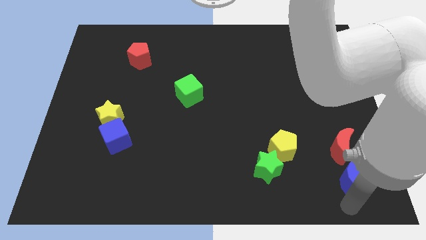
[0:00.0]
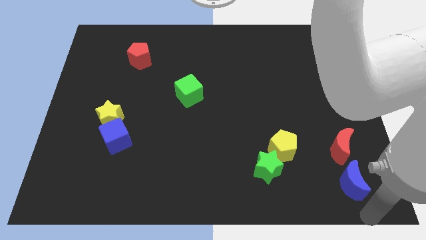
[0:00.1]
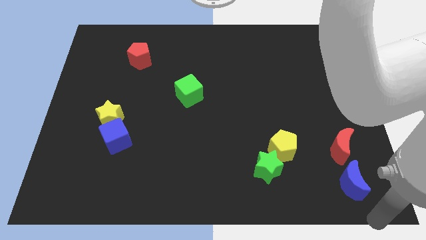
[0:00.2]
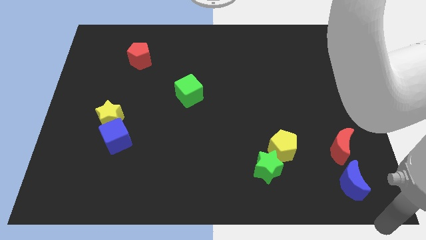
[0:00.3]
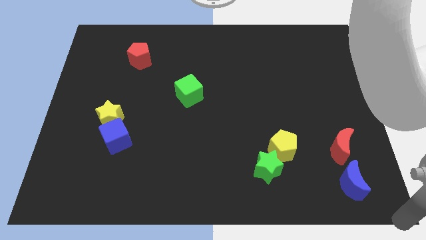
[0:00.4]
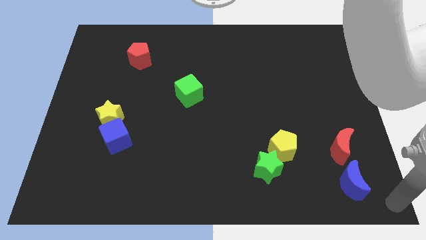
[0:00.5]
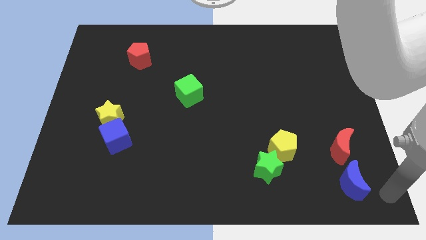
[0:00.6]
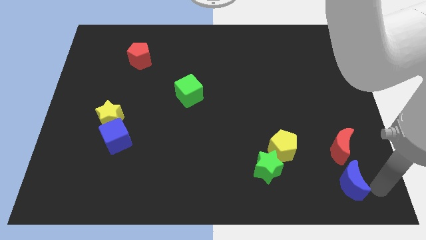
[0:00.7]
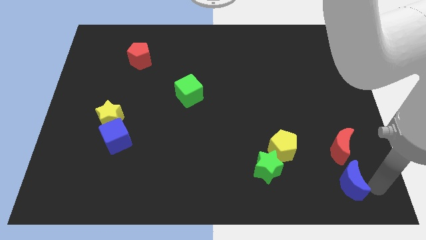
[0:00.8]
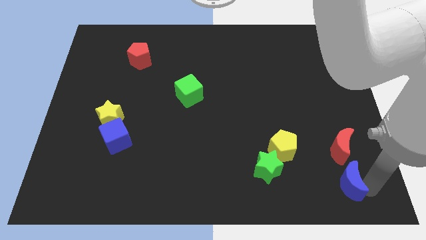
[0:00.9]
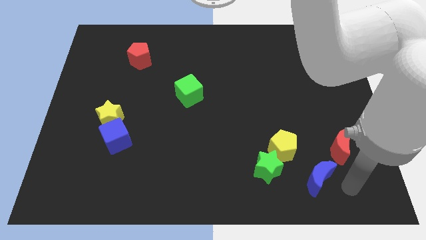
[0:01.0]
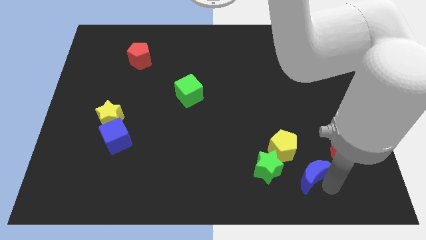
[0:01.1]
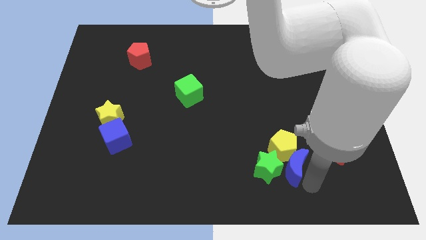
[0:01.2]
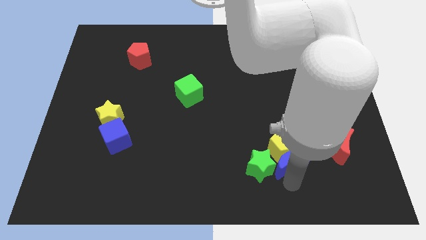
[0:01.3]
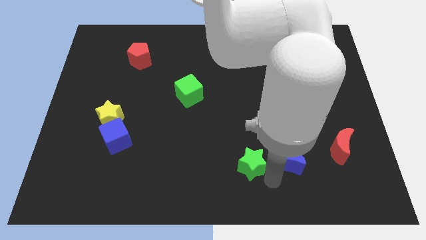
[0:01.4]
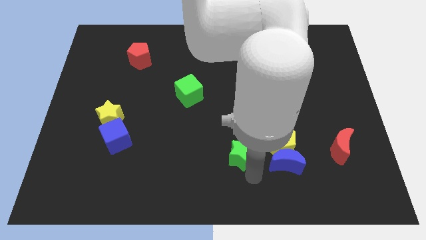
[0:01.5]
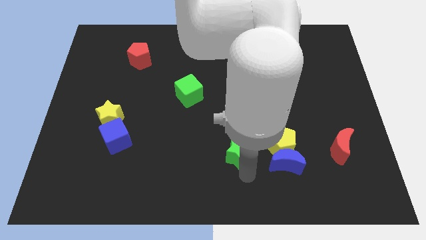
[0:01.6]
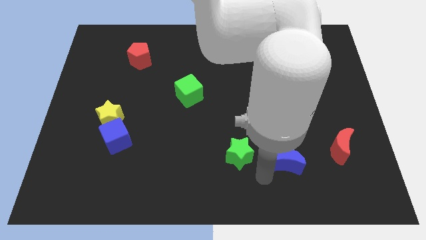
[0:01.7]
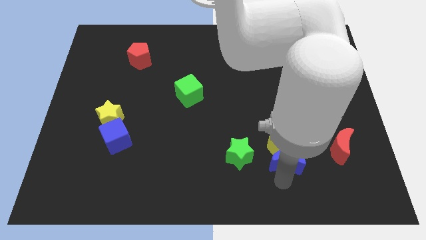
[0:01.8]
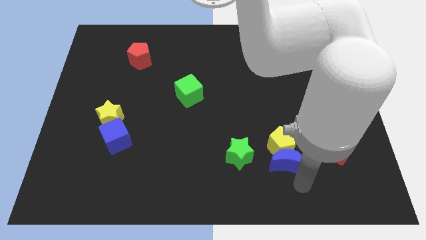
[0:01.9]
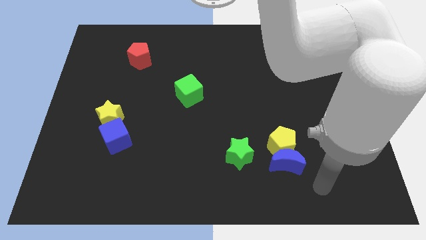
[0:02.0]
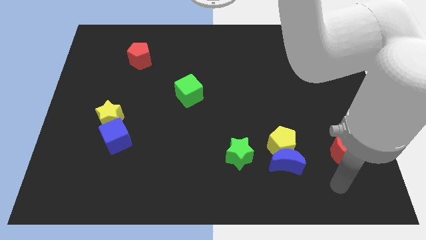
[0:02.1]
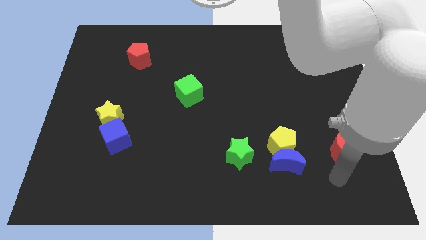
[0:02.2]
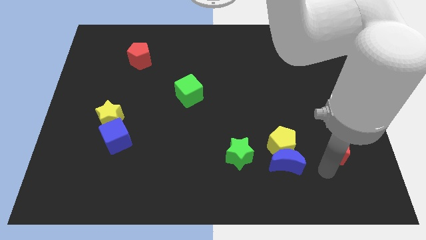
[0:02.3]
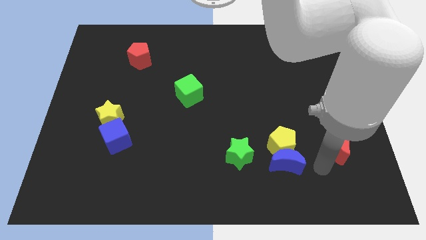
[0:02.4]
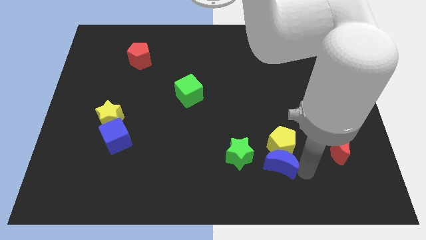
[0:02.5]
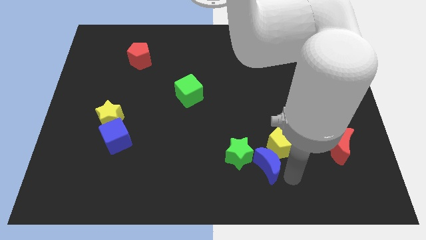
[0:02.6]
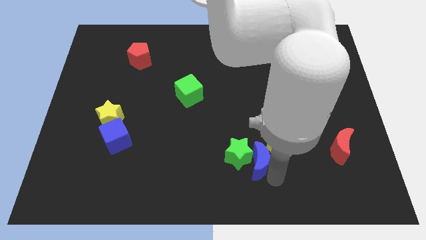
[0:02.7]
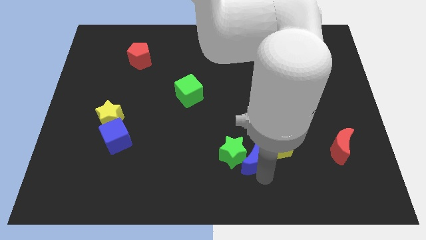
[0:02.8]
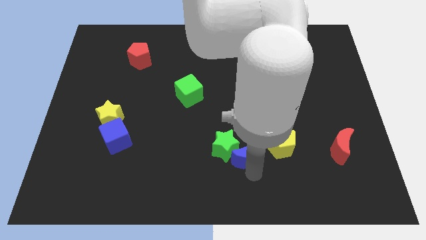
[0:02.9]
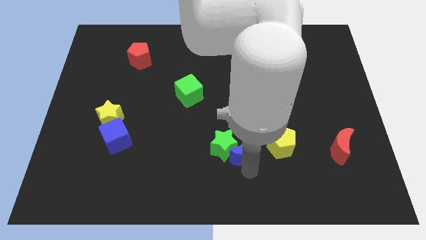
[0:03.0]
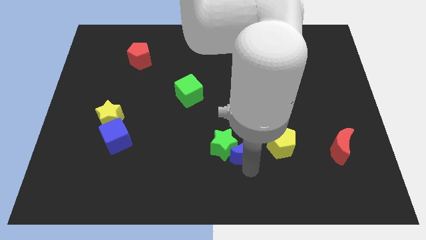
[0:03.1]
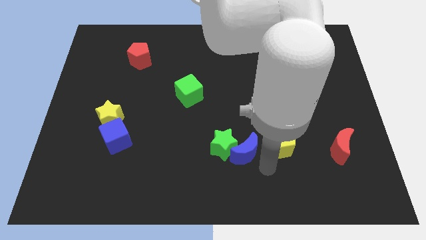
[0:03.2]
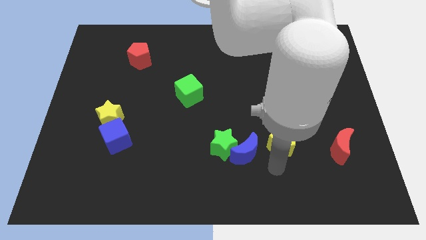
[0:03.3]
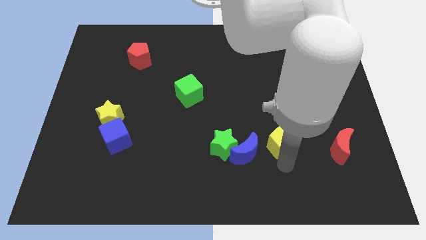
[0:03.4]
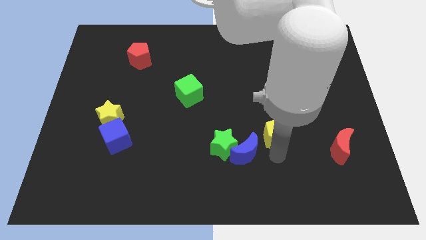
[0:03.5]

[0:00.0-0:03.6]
push the green star with the blue crescent towards center of the board

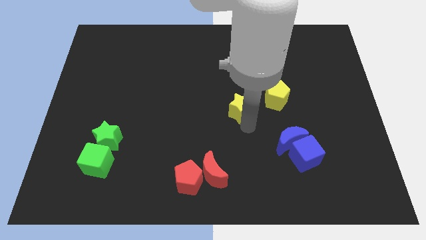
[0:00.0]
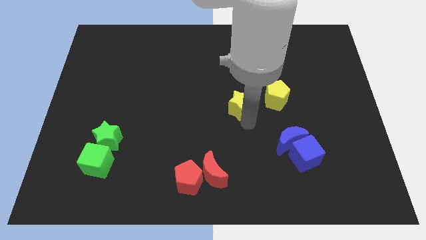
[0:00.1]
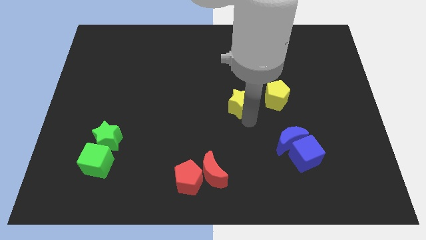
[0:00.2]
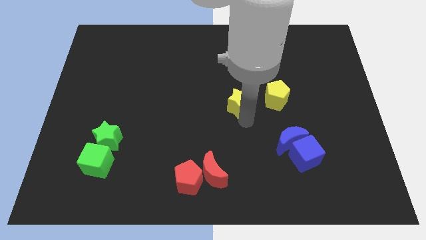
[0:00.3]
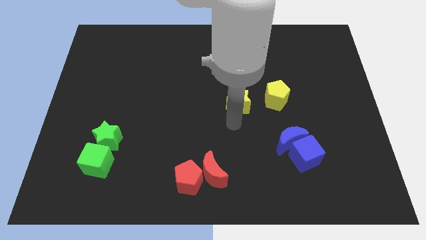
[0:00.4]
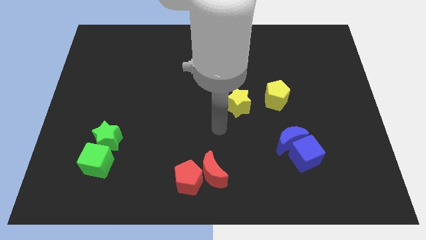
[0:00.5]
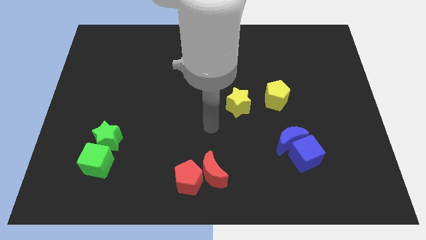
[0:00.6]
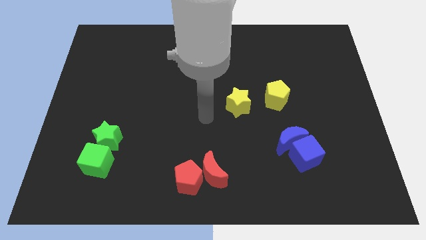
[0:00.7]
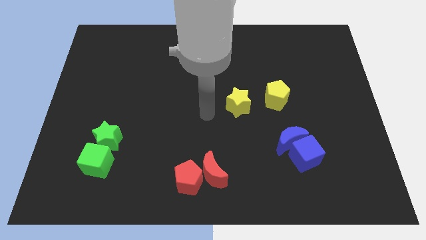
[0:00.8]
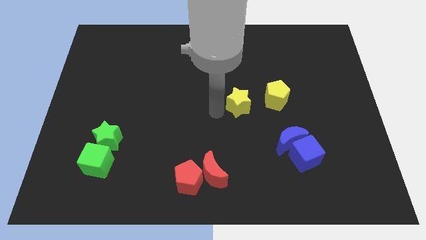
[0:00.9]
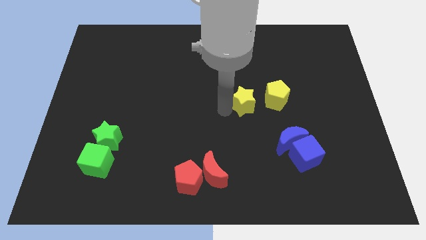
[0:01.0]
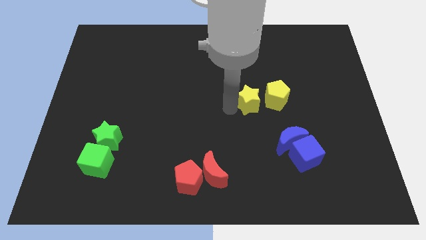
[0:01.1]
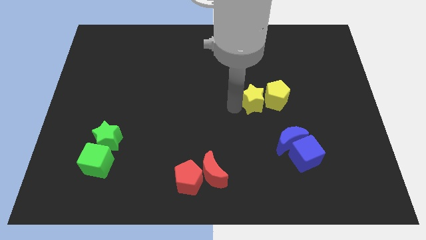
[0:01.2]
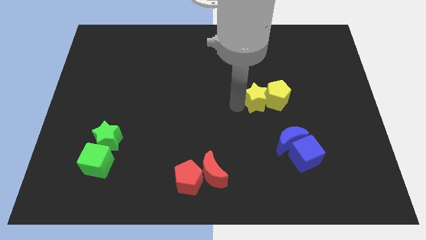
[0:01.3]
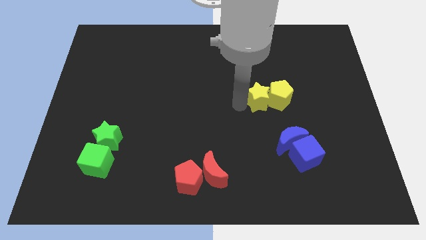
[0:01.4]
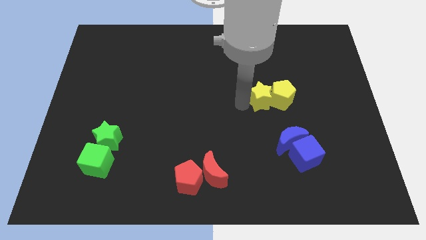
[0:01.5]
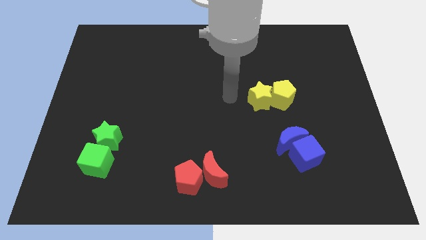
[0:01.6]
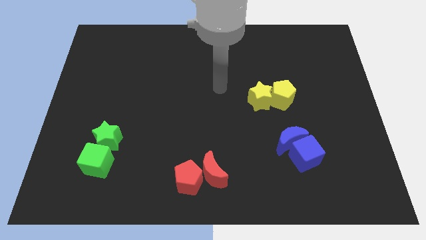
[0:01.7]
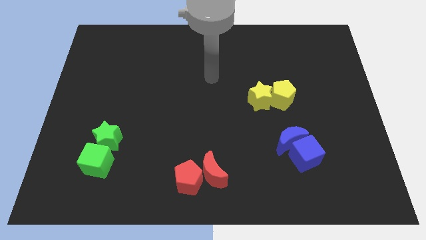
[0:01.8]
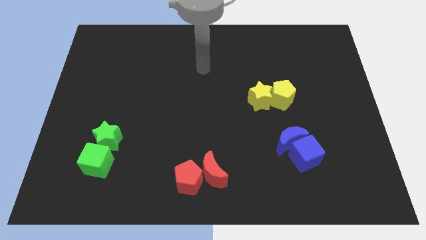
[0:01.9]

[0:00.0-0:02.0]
push the yellow star into yellow pentagon

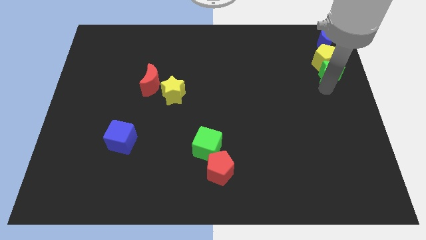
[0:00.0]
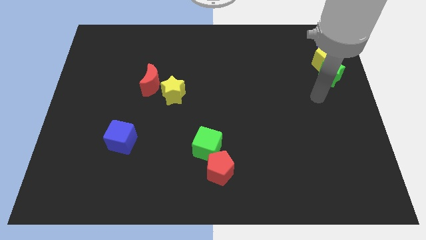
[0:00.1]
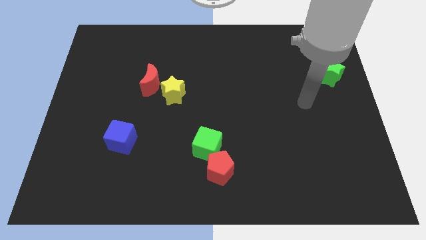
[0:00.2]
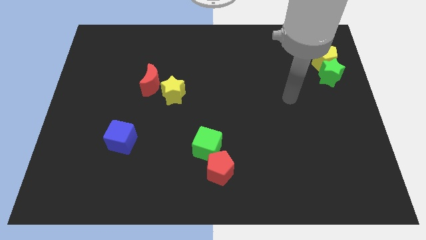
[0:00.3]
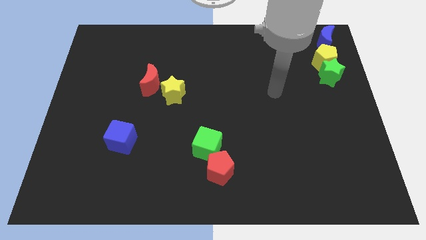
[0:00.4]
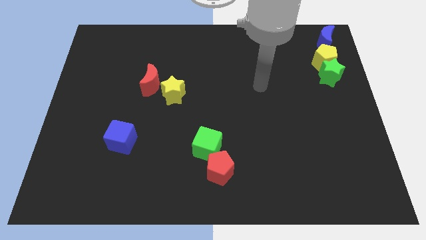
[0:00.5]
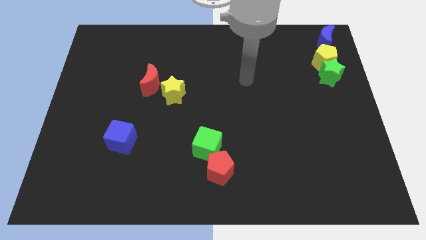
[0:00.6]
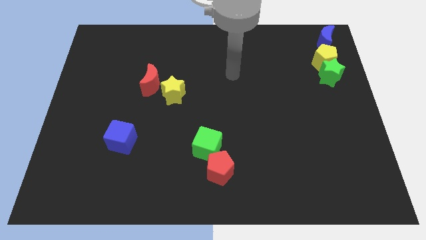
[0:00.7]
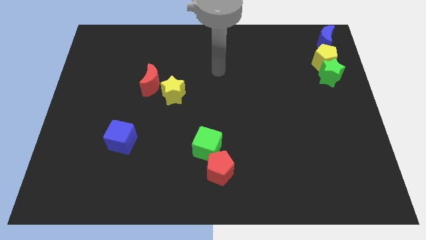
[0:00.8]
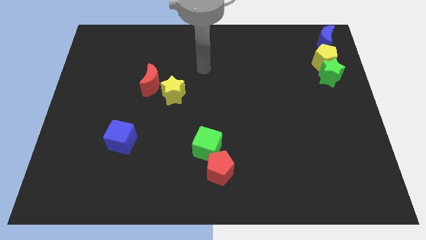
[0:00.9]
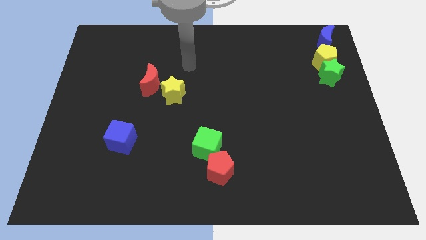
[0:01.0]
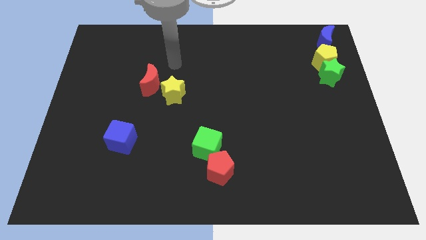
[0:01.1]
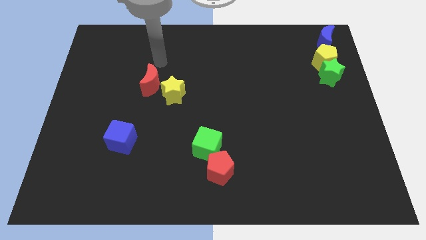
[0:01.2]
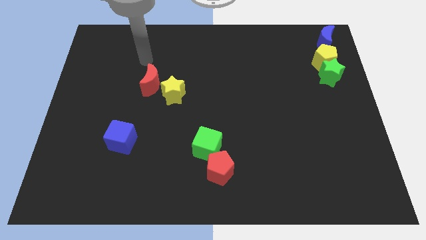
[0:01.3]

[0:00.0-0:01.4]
move away form the green star

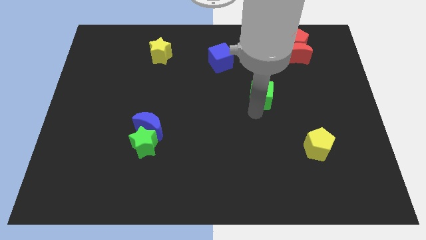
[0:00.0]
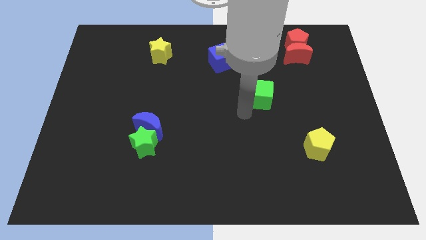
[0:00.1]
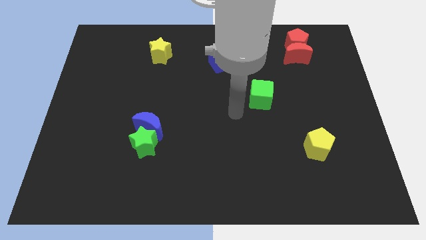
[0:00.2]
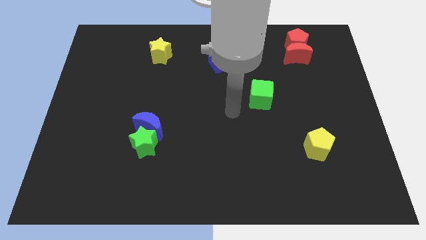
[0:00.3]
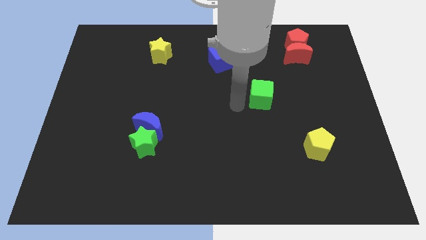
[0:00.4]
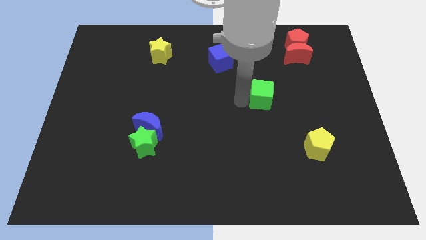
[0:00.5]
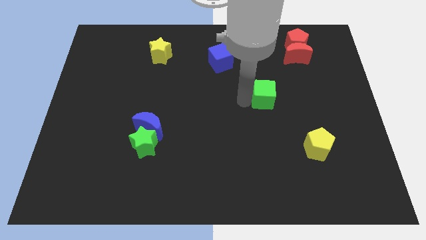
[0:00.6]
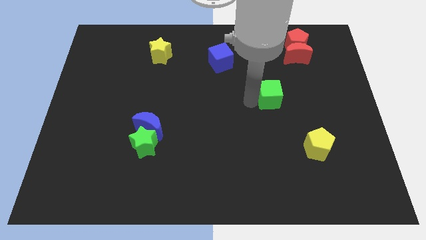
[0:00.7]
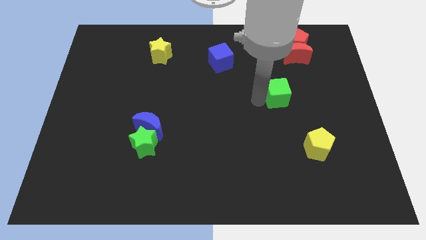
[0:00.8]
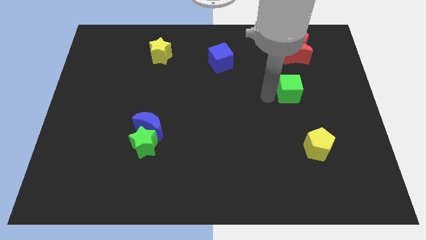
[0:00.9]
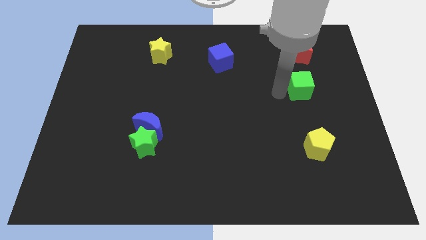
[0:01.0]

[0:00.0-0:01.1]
move green cube below the red moon

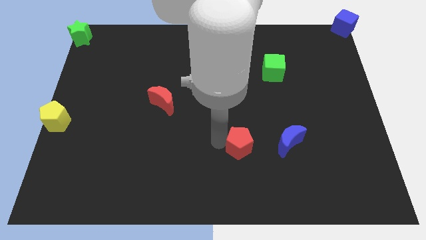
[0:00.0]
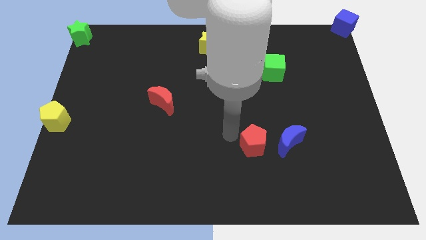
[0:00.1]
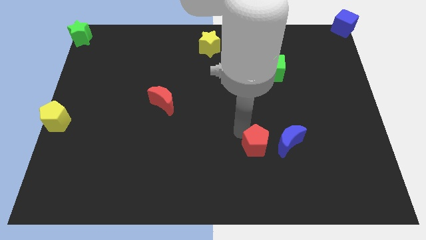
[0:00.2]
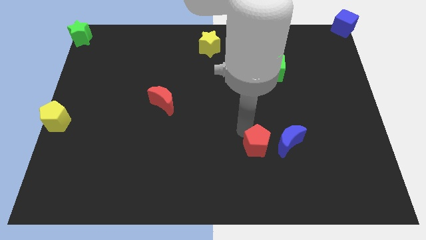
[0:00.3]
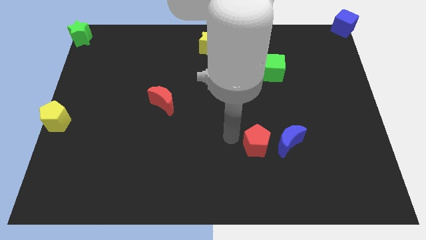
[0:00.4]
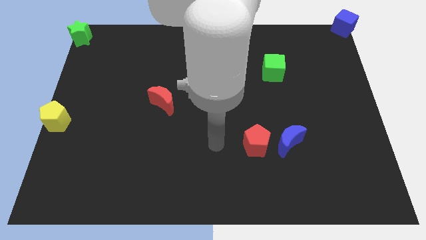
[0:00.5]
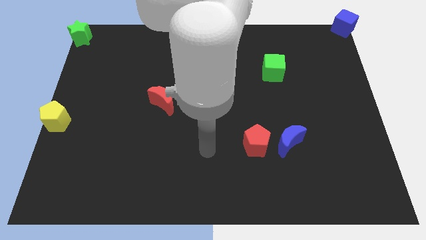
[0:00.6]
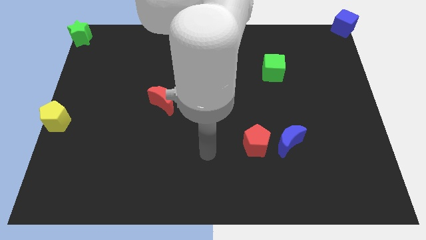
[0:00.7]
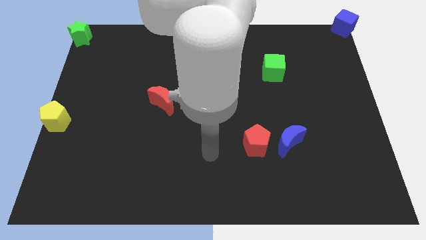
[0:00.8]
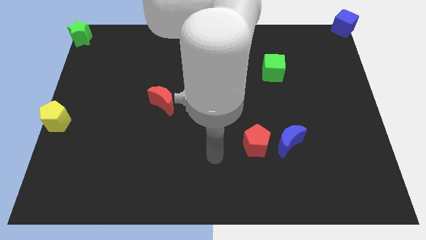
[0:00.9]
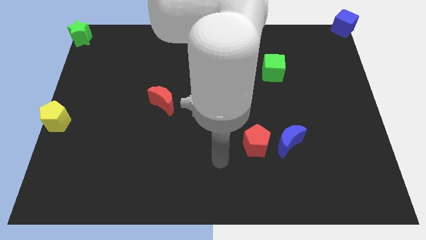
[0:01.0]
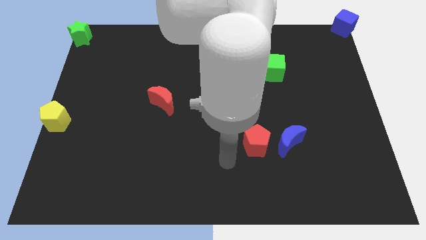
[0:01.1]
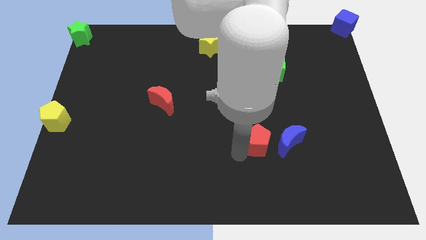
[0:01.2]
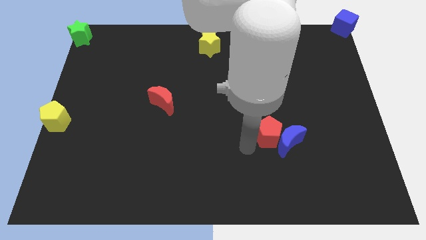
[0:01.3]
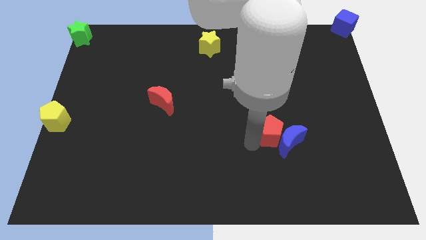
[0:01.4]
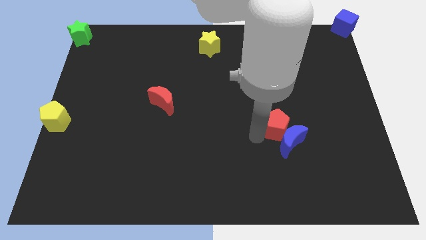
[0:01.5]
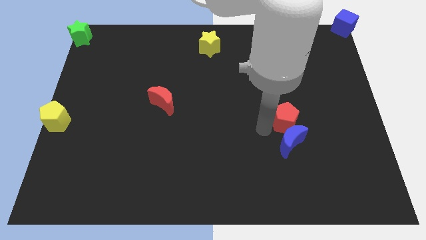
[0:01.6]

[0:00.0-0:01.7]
move the red pentagon into the blue crescent on the bottom right of the board
